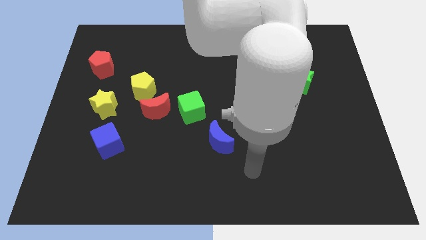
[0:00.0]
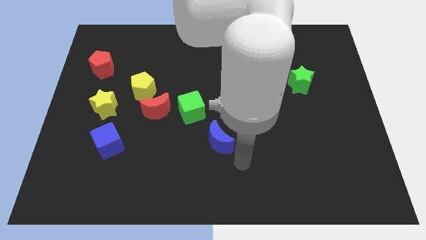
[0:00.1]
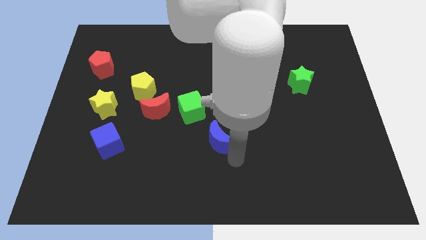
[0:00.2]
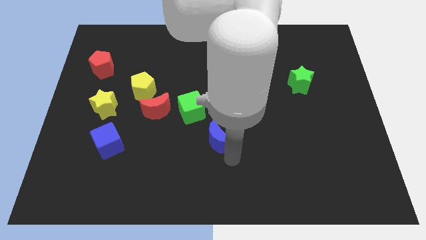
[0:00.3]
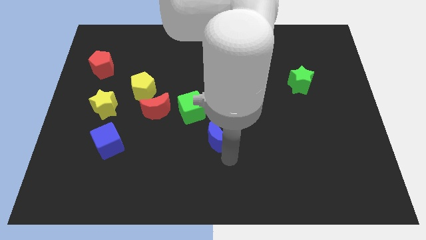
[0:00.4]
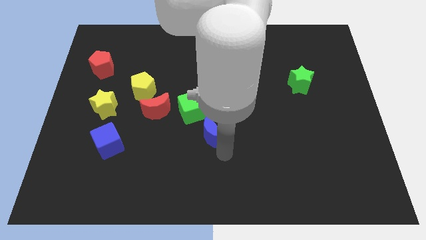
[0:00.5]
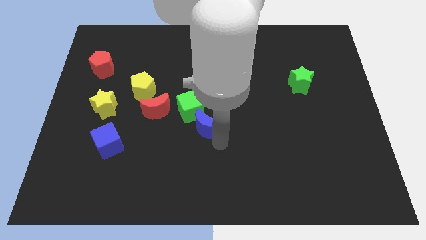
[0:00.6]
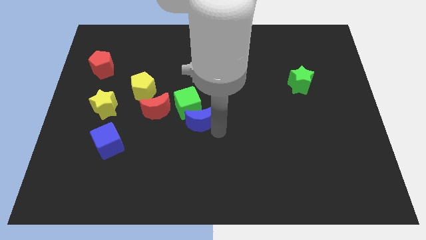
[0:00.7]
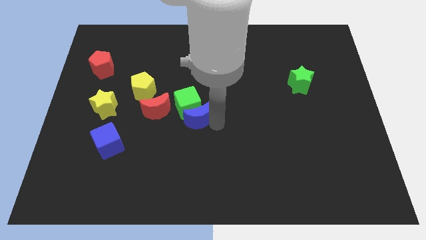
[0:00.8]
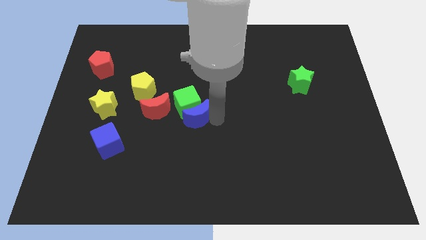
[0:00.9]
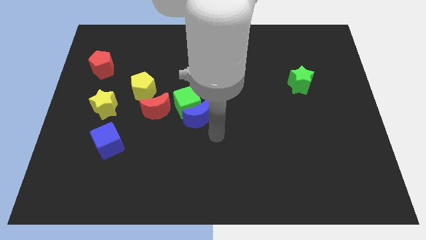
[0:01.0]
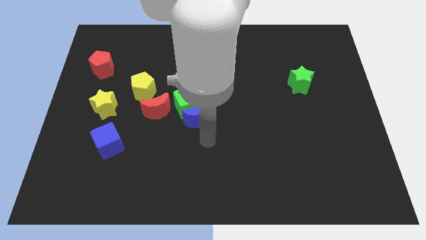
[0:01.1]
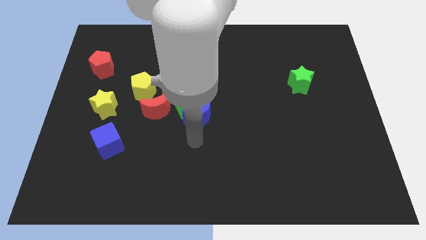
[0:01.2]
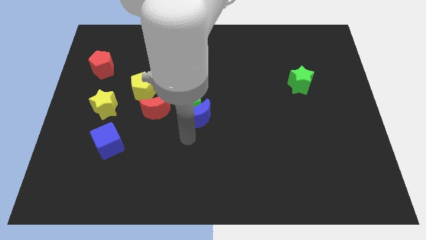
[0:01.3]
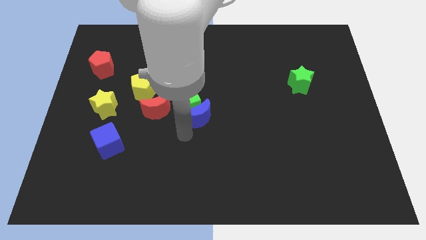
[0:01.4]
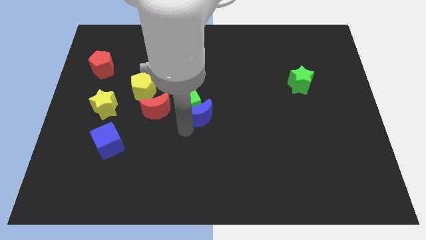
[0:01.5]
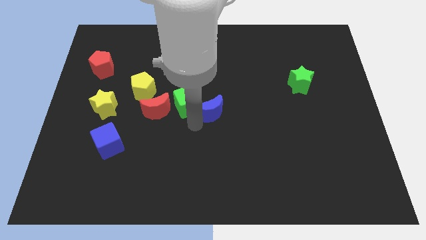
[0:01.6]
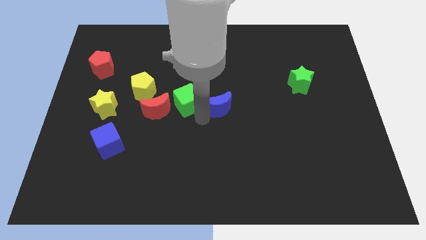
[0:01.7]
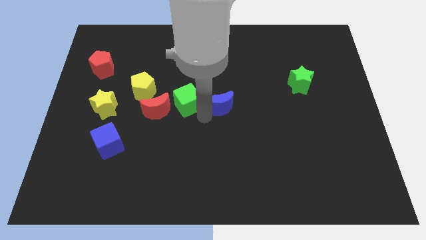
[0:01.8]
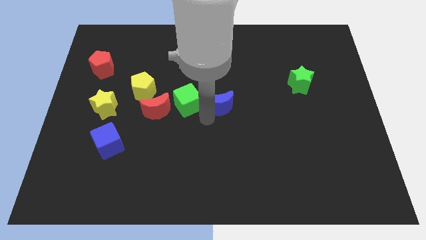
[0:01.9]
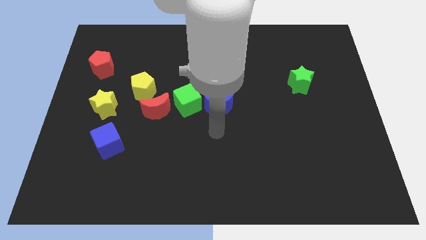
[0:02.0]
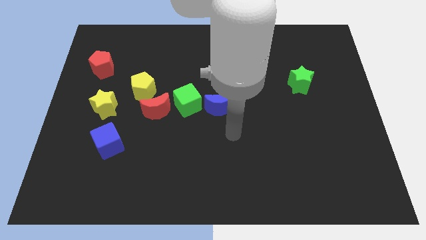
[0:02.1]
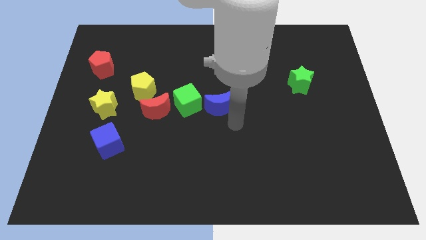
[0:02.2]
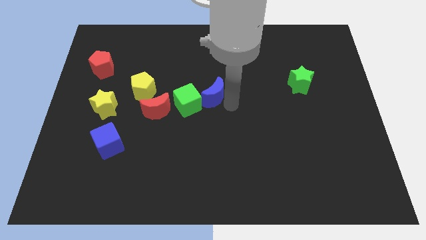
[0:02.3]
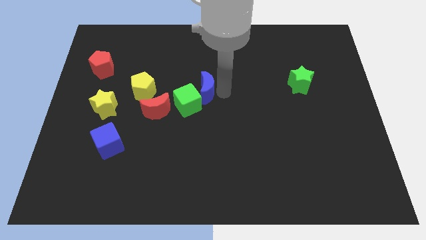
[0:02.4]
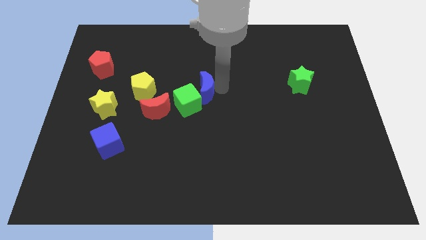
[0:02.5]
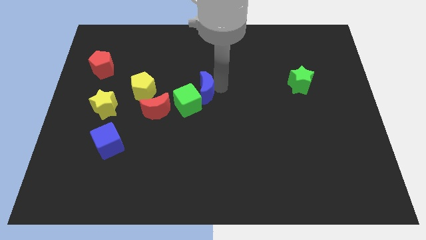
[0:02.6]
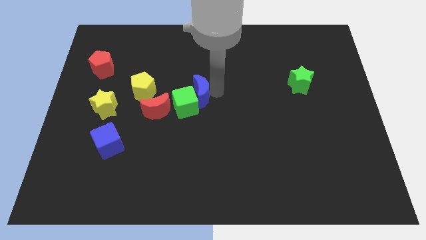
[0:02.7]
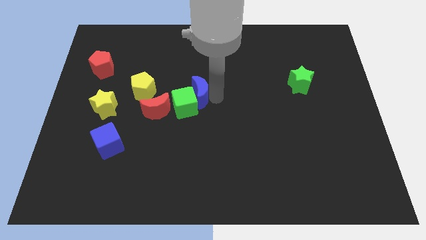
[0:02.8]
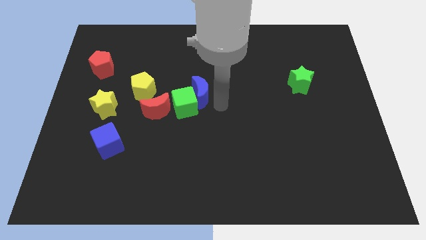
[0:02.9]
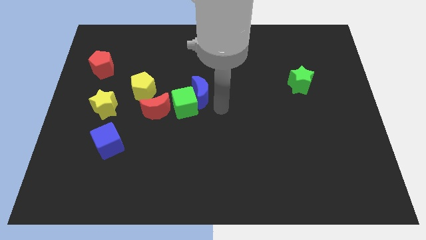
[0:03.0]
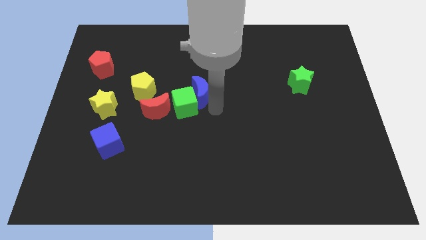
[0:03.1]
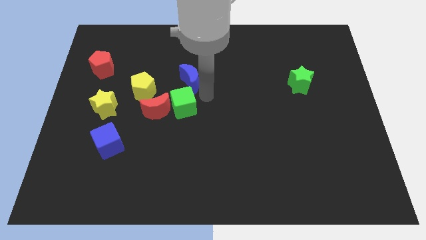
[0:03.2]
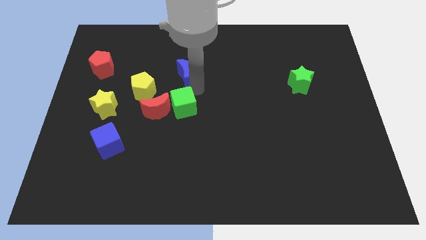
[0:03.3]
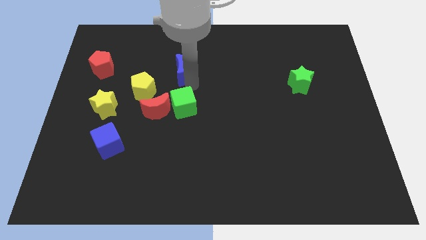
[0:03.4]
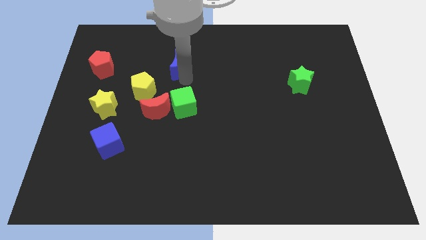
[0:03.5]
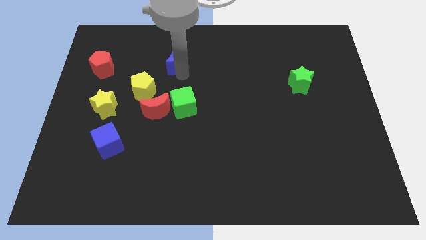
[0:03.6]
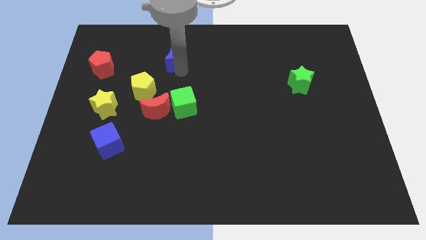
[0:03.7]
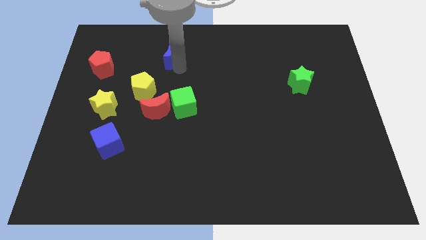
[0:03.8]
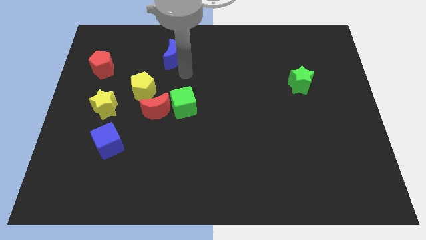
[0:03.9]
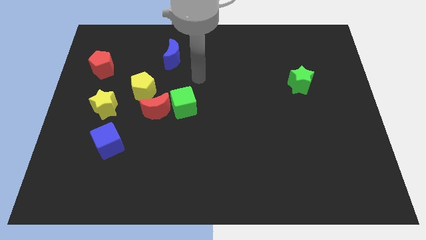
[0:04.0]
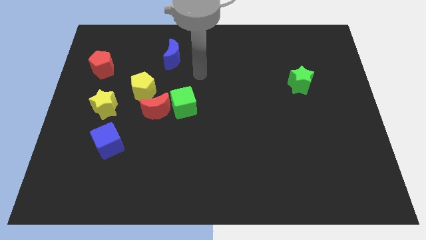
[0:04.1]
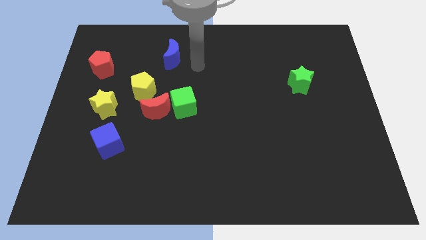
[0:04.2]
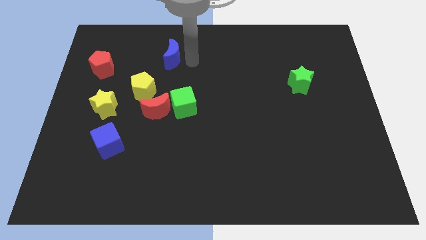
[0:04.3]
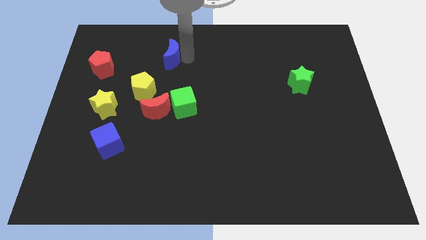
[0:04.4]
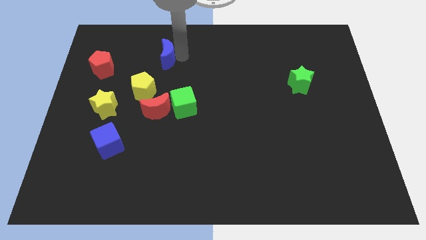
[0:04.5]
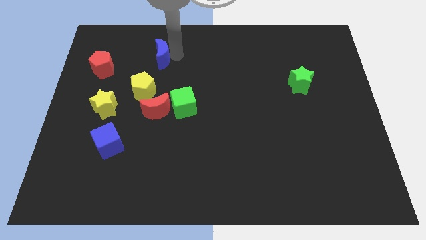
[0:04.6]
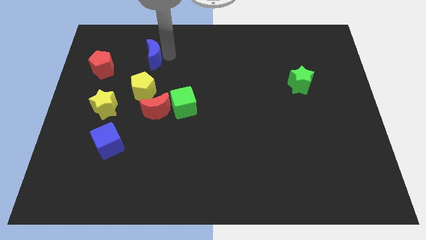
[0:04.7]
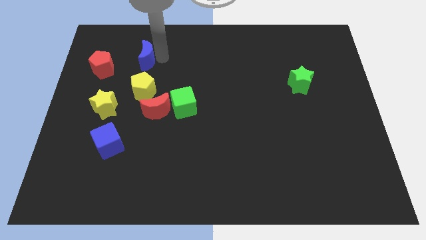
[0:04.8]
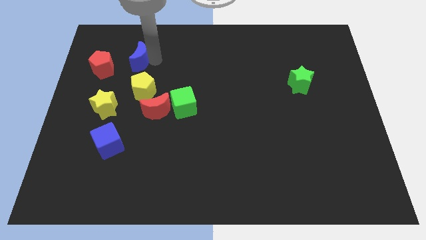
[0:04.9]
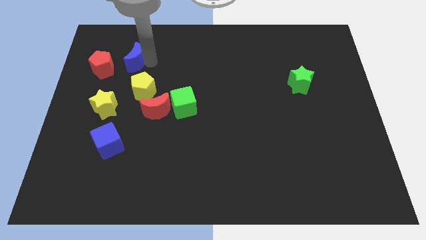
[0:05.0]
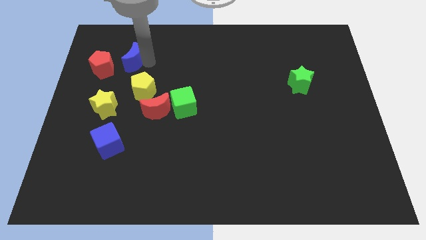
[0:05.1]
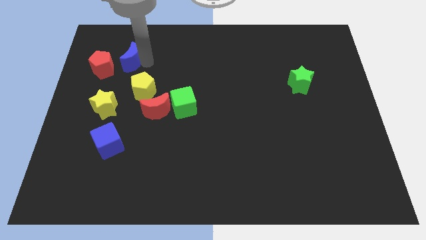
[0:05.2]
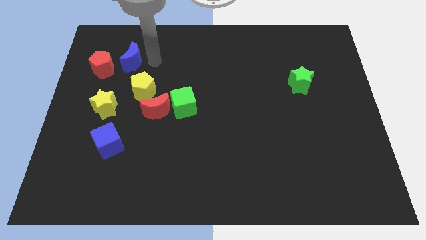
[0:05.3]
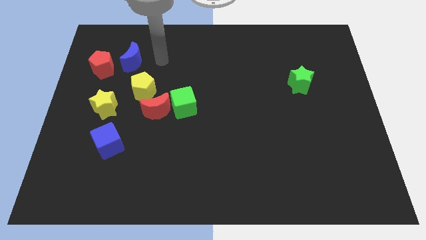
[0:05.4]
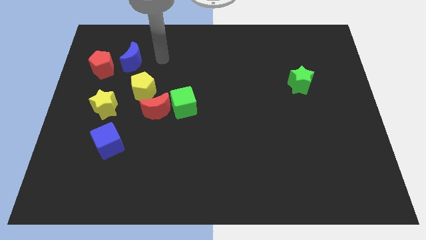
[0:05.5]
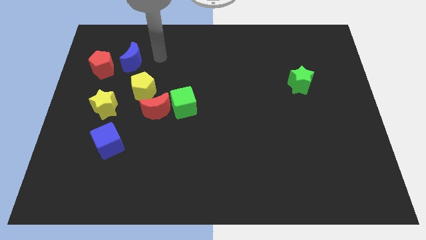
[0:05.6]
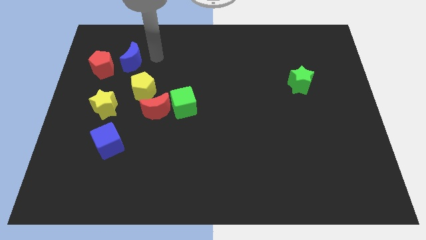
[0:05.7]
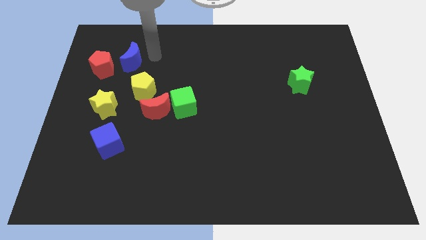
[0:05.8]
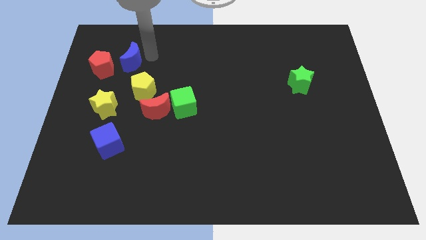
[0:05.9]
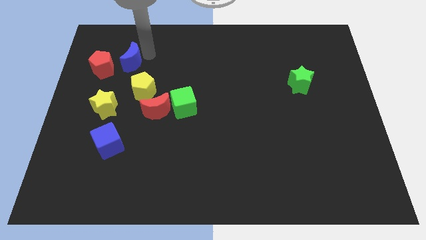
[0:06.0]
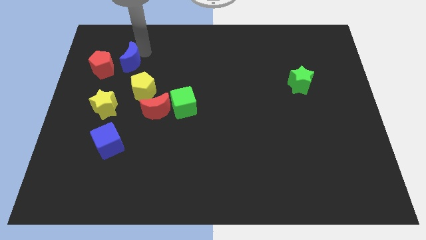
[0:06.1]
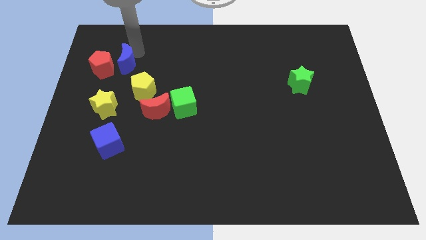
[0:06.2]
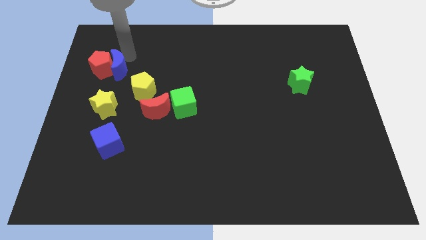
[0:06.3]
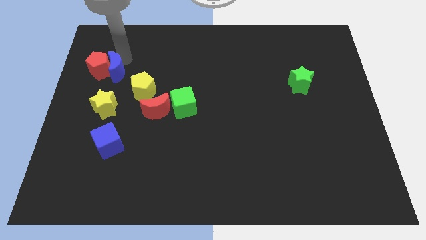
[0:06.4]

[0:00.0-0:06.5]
slide the blue moon towards the red pentagon

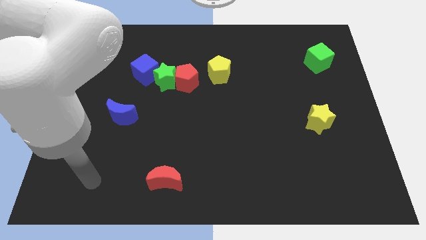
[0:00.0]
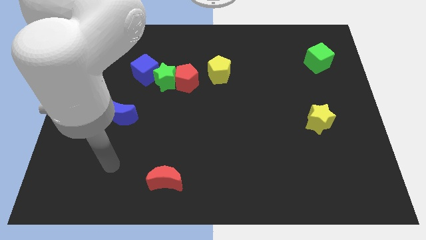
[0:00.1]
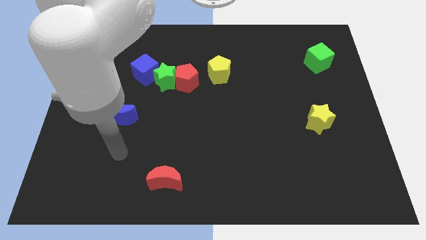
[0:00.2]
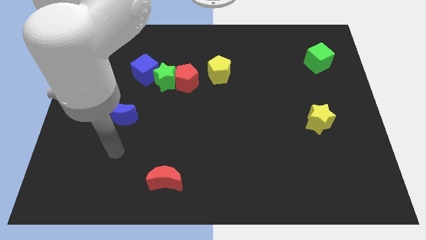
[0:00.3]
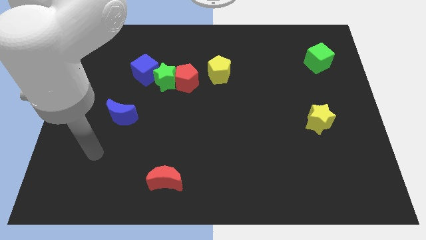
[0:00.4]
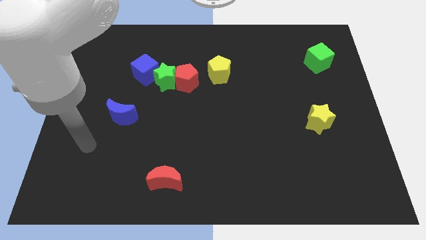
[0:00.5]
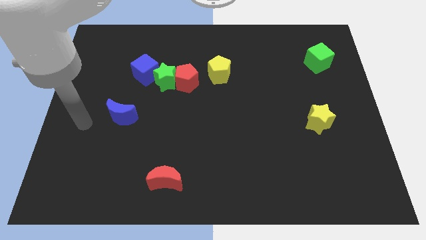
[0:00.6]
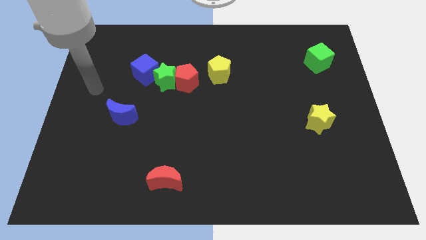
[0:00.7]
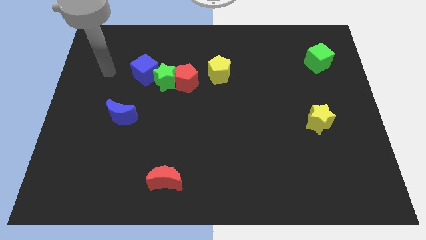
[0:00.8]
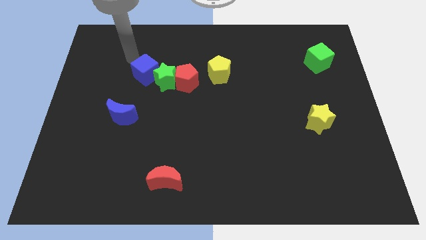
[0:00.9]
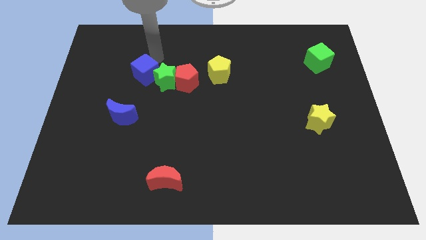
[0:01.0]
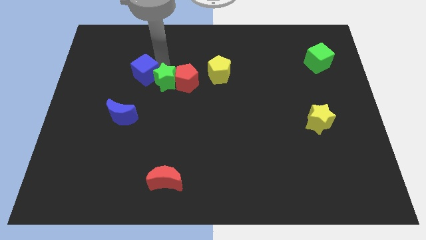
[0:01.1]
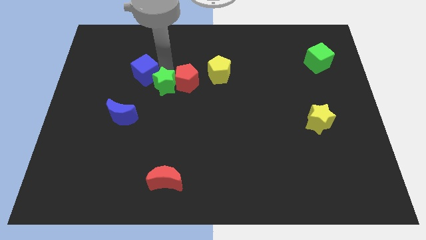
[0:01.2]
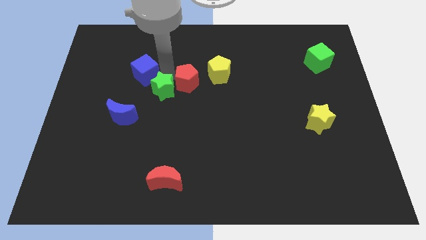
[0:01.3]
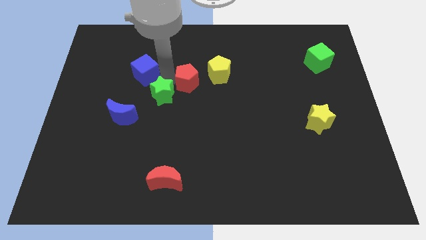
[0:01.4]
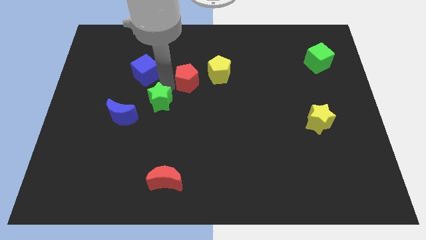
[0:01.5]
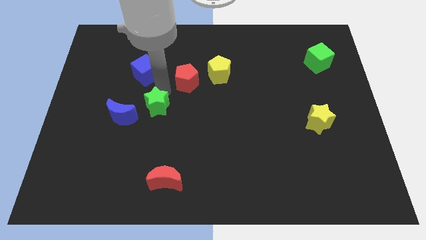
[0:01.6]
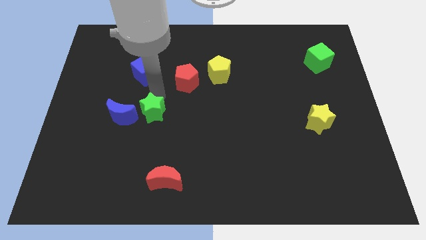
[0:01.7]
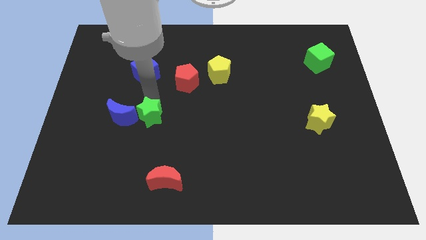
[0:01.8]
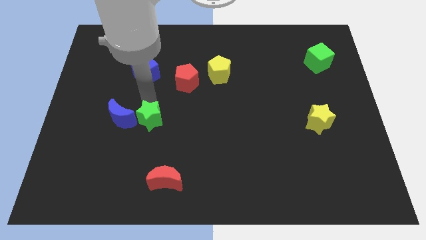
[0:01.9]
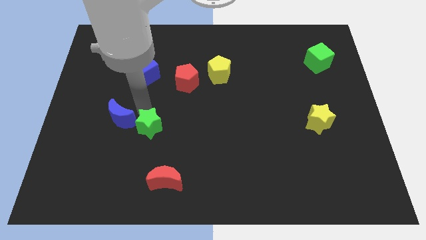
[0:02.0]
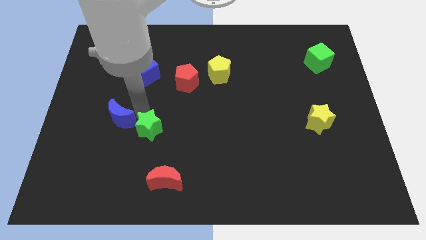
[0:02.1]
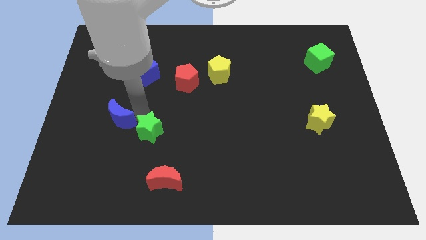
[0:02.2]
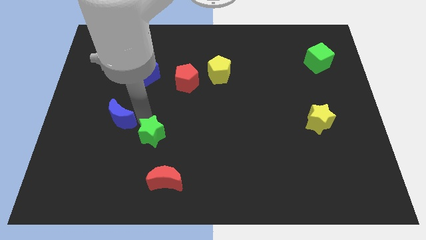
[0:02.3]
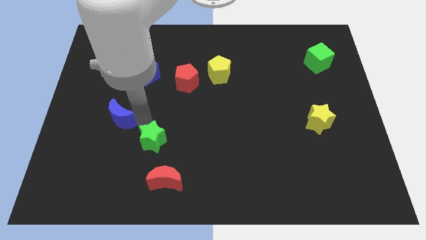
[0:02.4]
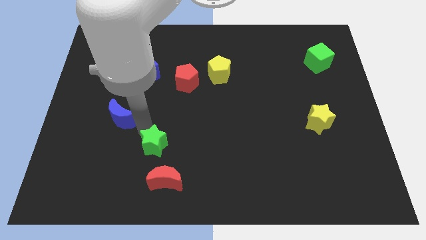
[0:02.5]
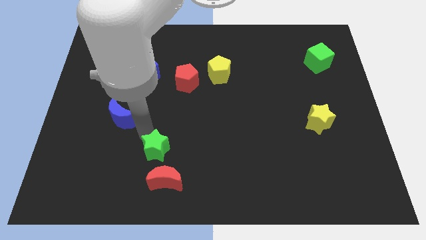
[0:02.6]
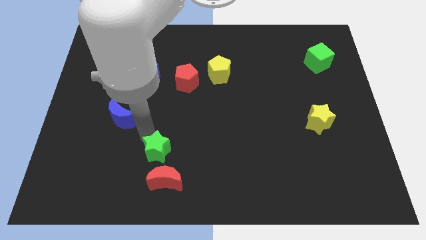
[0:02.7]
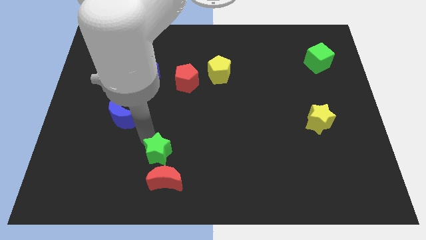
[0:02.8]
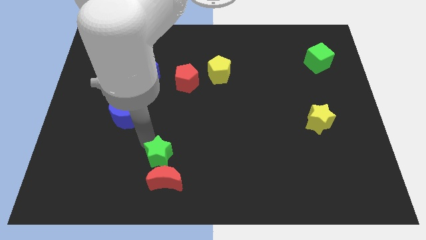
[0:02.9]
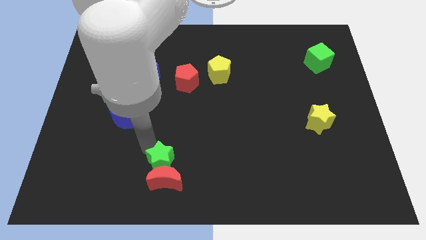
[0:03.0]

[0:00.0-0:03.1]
put the green star towards the red moon
